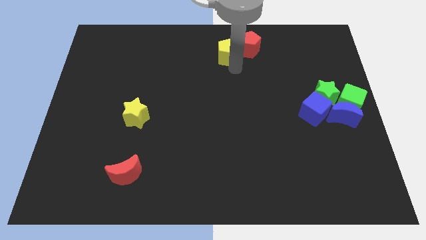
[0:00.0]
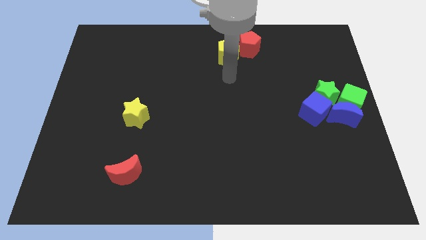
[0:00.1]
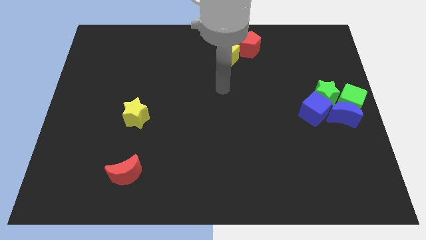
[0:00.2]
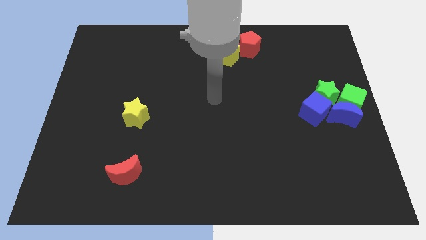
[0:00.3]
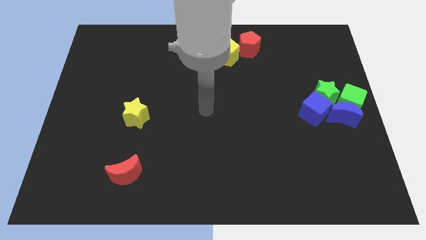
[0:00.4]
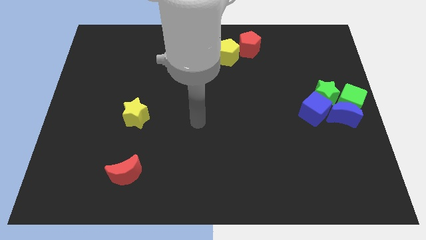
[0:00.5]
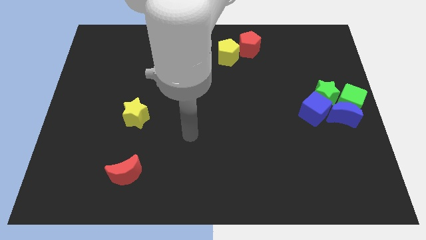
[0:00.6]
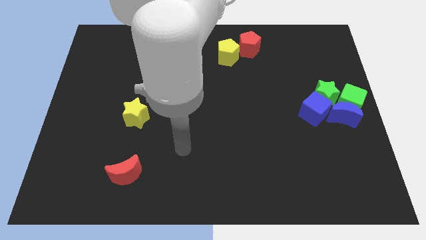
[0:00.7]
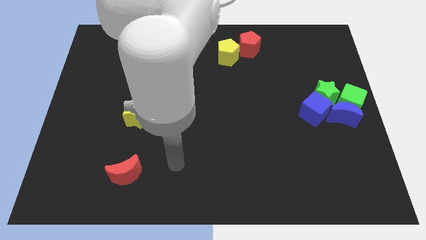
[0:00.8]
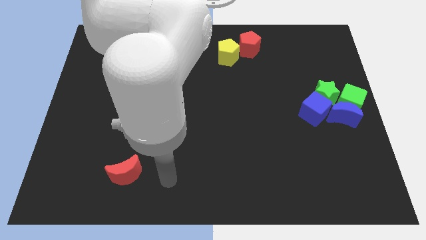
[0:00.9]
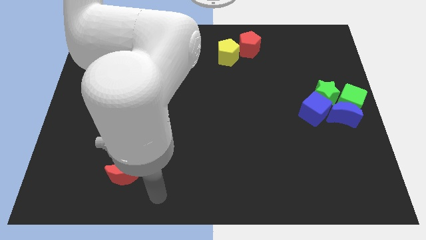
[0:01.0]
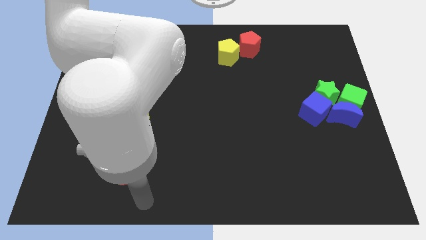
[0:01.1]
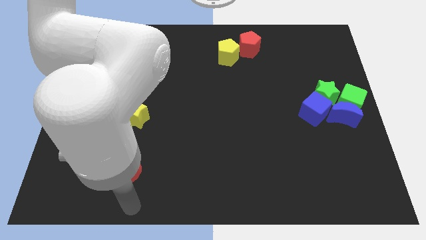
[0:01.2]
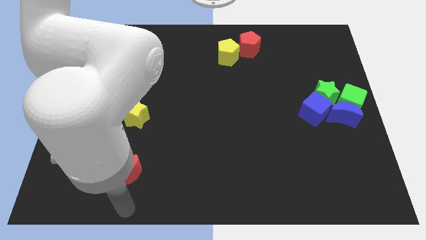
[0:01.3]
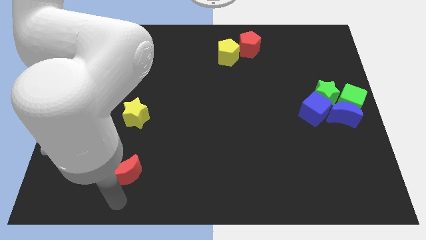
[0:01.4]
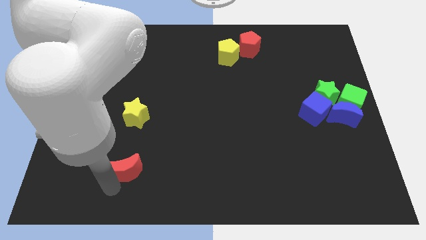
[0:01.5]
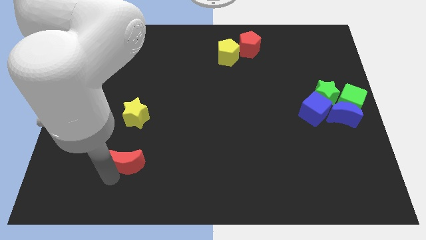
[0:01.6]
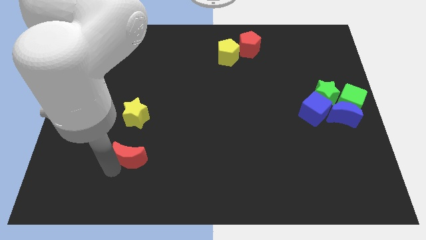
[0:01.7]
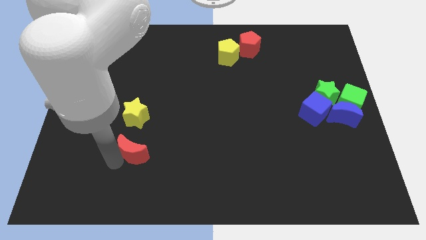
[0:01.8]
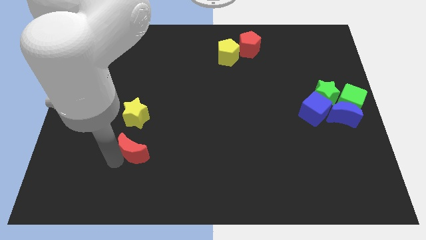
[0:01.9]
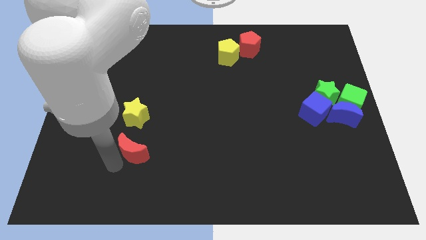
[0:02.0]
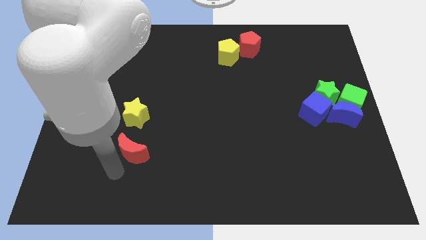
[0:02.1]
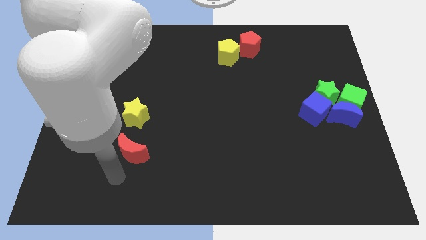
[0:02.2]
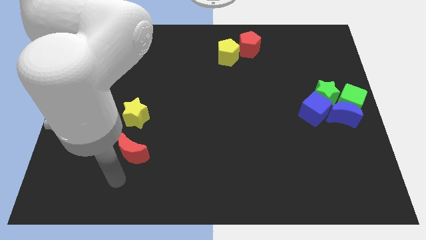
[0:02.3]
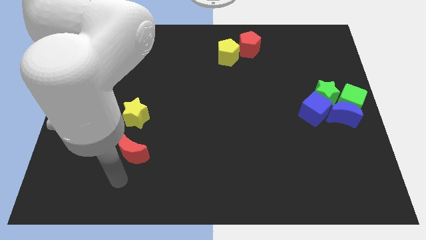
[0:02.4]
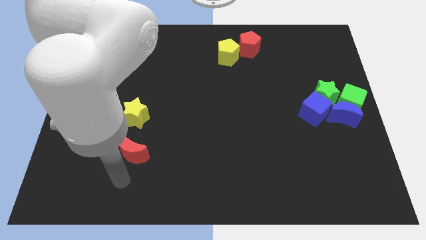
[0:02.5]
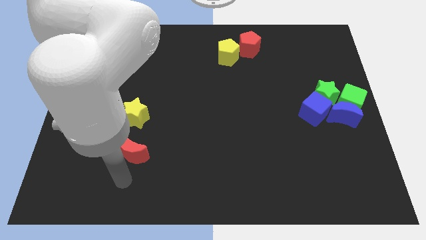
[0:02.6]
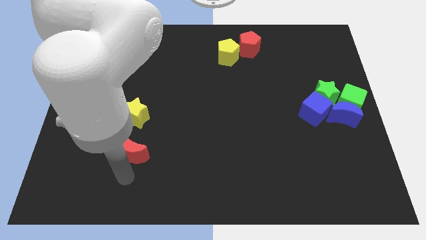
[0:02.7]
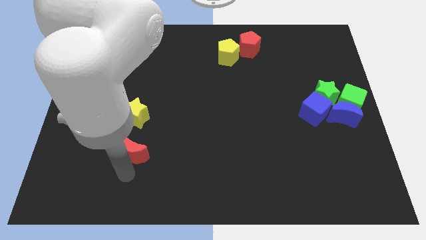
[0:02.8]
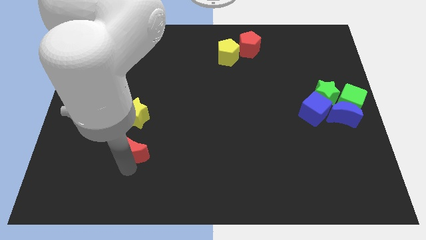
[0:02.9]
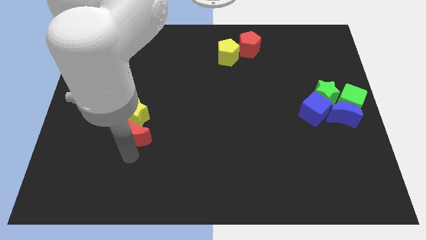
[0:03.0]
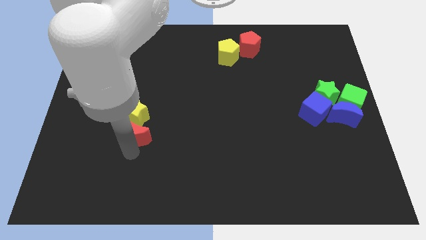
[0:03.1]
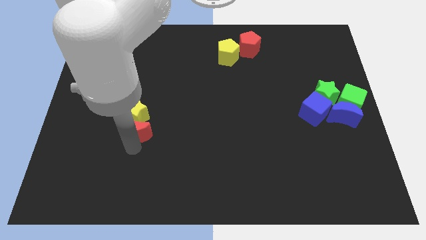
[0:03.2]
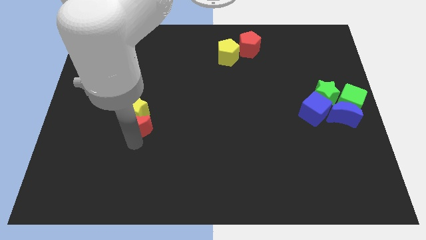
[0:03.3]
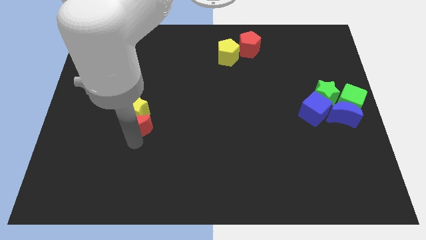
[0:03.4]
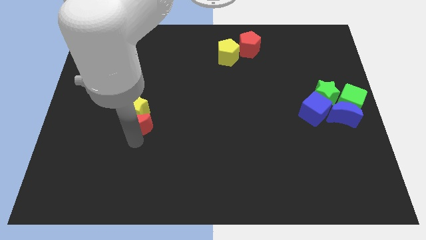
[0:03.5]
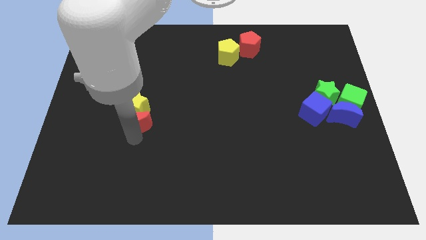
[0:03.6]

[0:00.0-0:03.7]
move the red moon into the yellow star

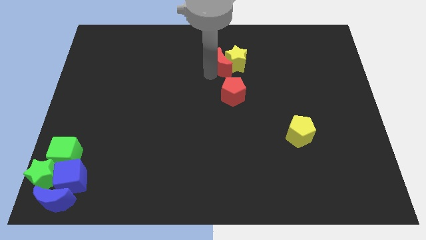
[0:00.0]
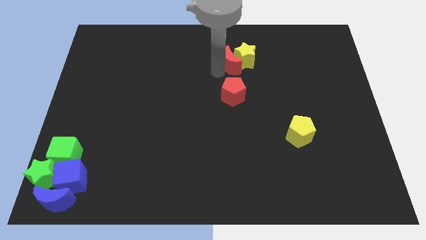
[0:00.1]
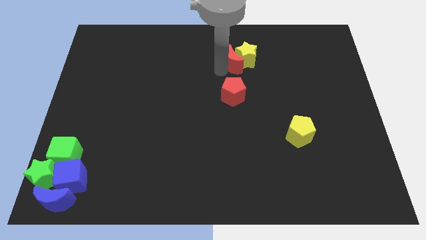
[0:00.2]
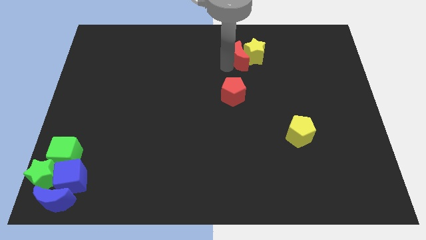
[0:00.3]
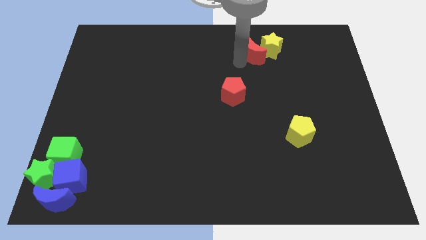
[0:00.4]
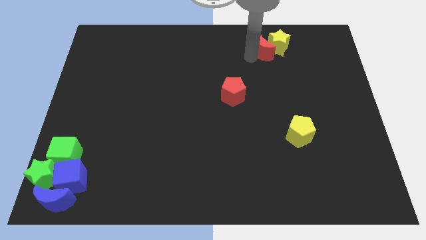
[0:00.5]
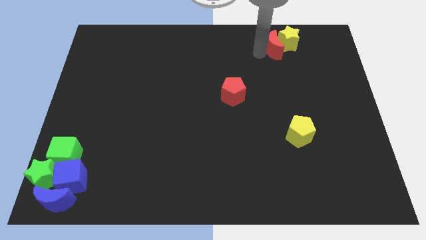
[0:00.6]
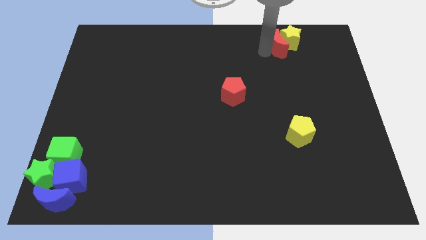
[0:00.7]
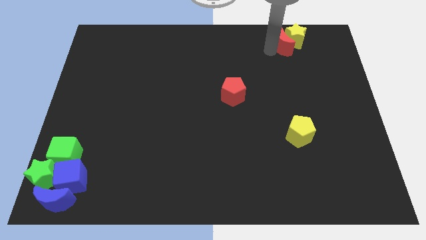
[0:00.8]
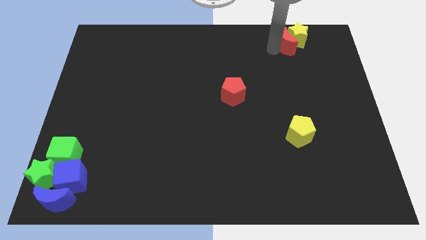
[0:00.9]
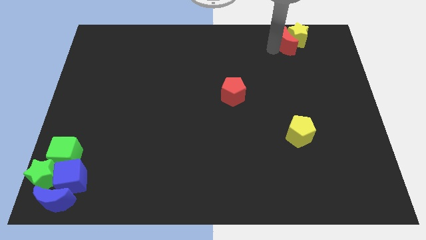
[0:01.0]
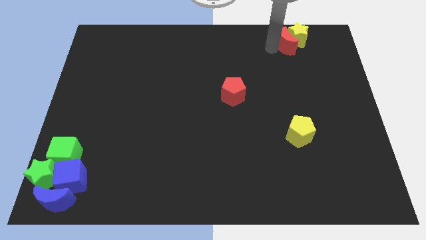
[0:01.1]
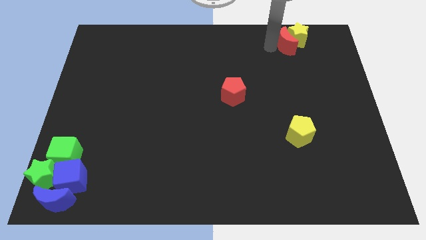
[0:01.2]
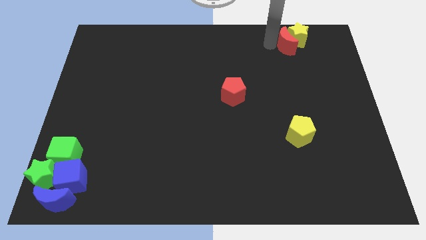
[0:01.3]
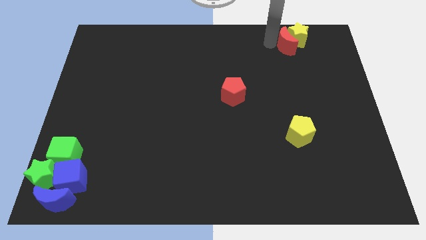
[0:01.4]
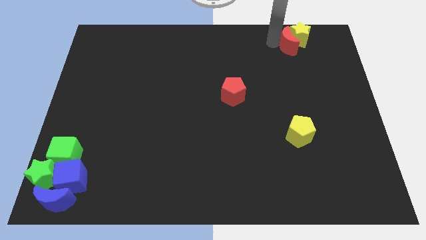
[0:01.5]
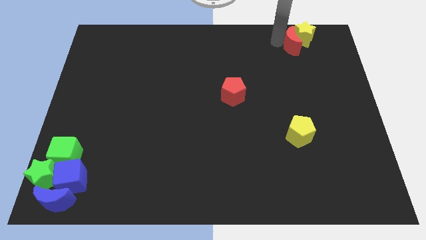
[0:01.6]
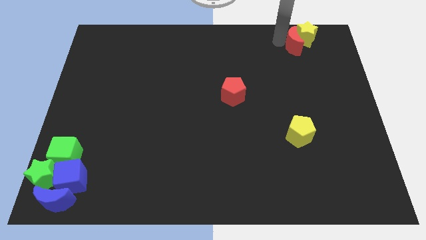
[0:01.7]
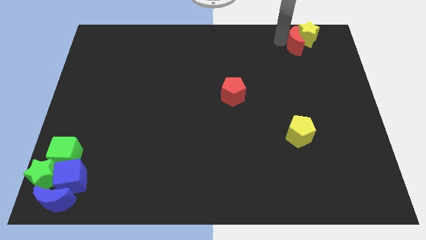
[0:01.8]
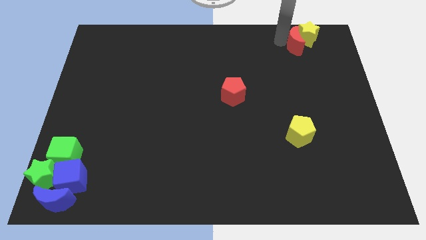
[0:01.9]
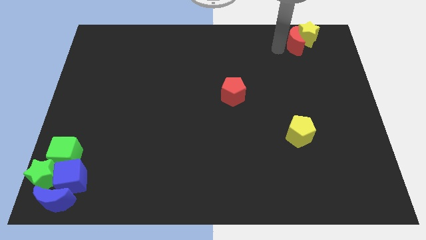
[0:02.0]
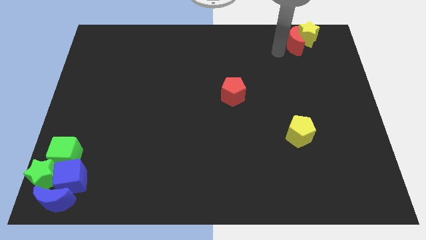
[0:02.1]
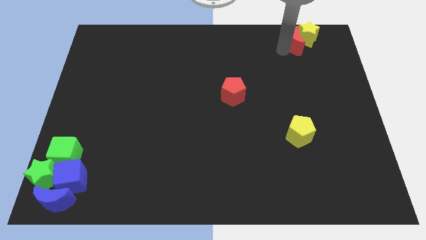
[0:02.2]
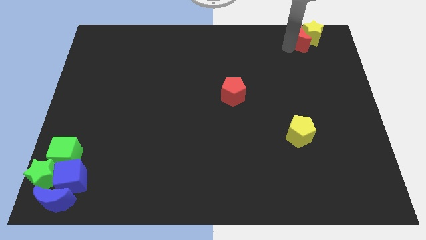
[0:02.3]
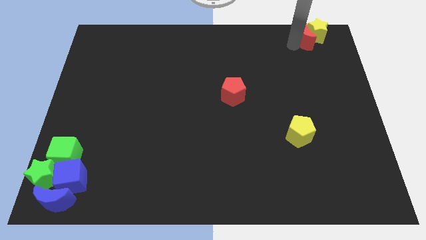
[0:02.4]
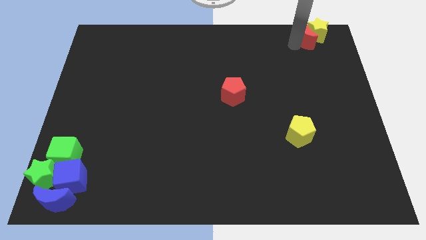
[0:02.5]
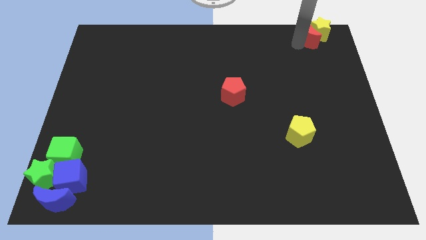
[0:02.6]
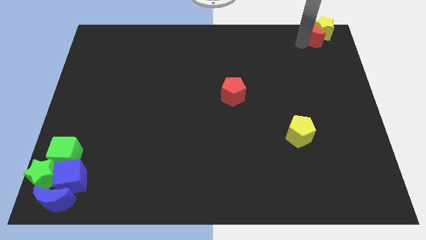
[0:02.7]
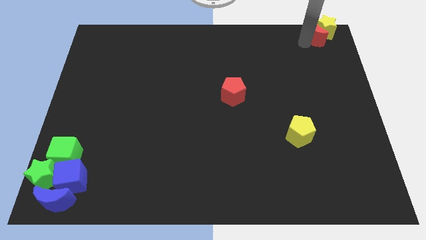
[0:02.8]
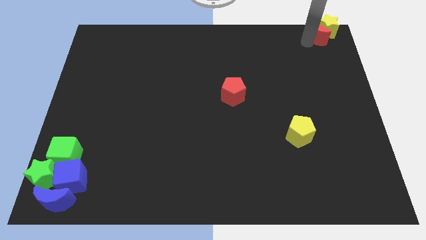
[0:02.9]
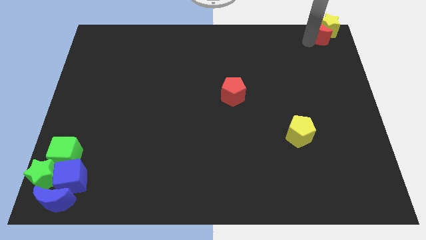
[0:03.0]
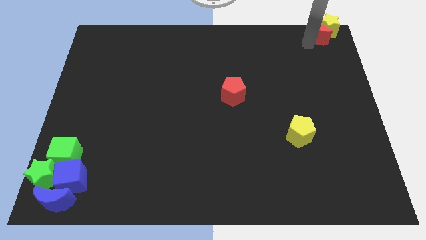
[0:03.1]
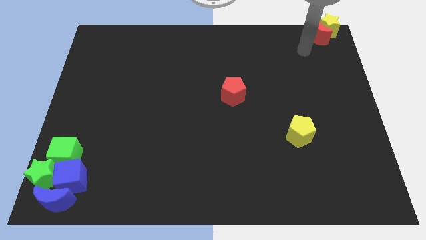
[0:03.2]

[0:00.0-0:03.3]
place the yellow star and red crescent to the top right corner of the board

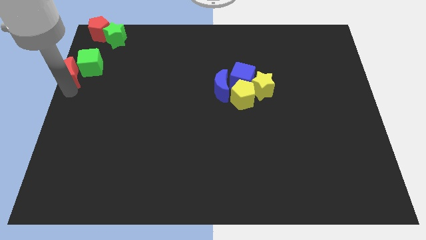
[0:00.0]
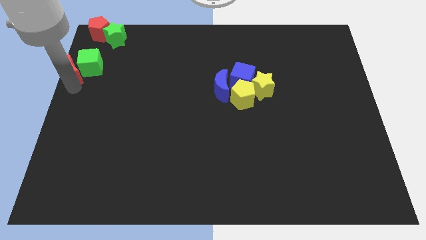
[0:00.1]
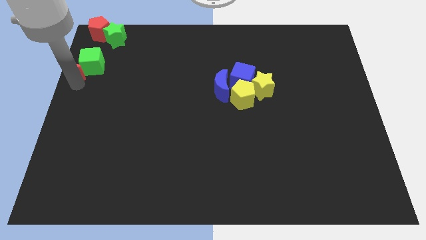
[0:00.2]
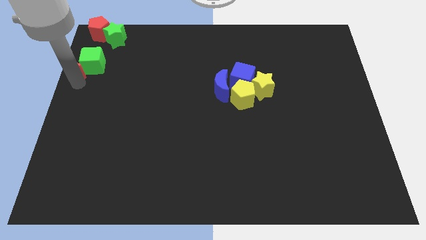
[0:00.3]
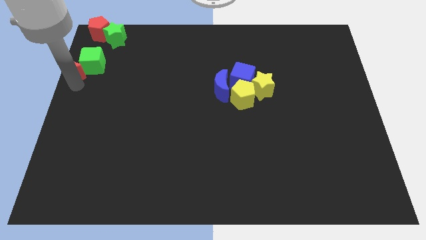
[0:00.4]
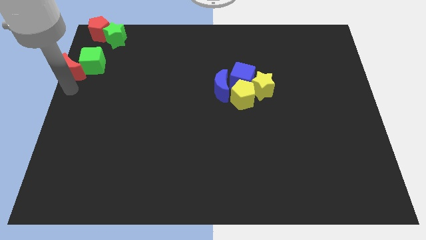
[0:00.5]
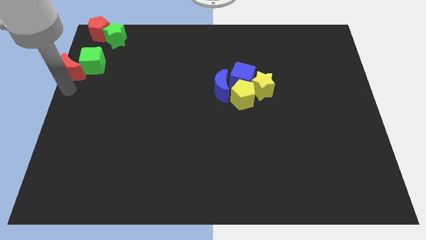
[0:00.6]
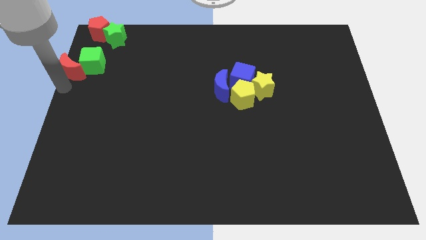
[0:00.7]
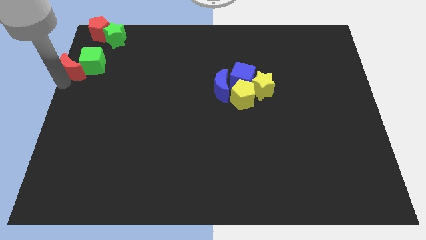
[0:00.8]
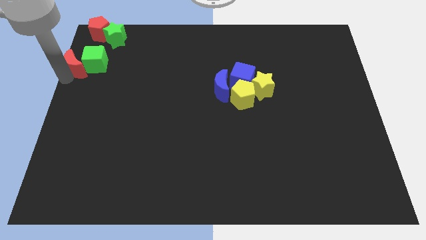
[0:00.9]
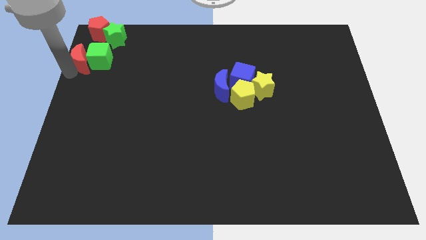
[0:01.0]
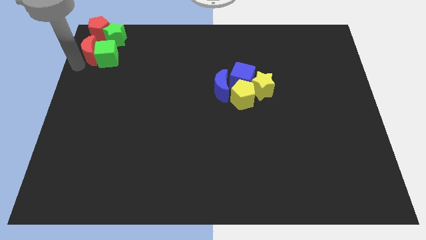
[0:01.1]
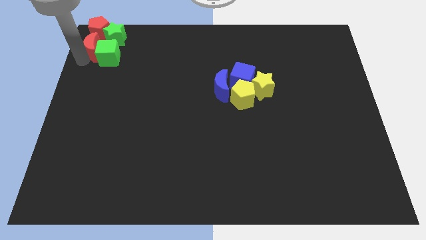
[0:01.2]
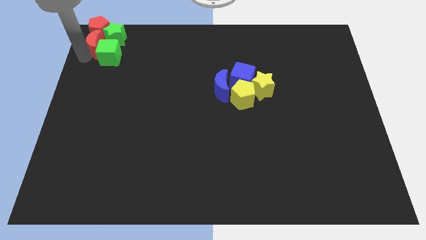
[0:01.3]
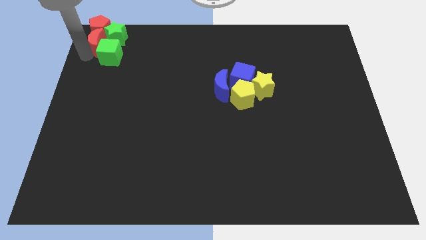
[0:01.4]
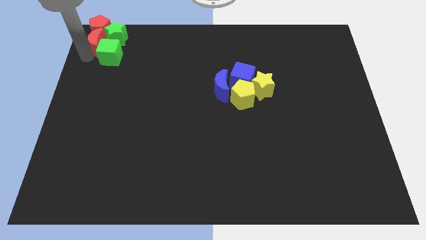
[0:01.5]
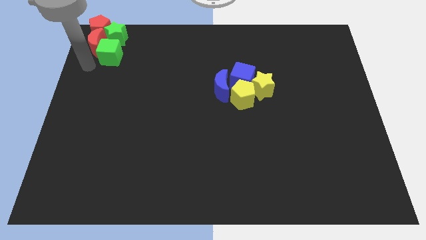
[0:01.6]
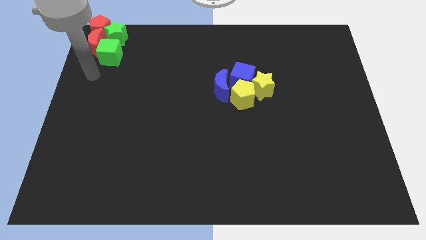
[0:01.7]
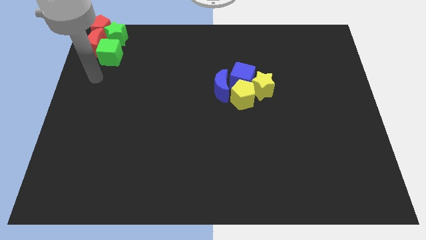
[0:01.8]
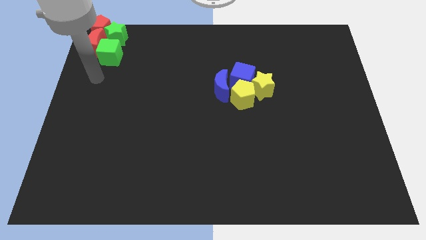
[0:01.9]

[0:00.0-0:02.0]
group up the red and green blocks together at the top left corner of the board
